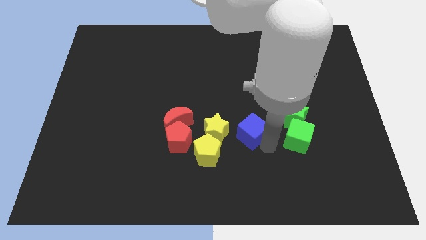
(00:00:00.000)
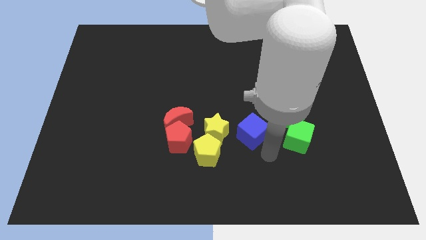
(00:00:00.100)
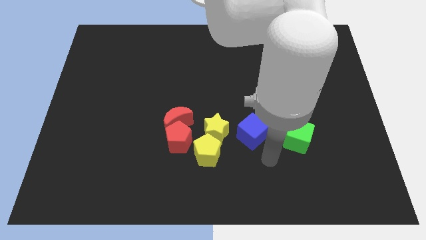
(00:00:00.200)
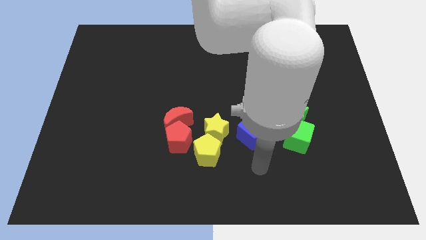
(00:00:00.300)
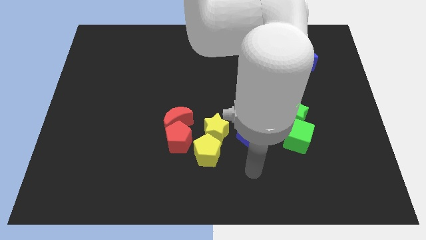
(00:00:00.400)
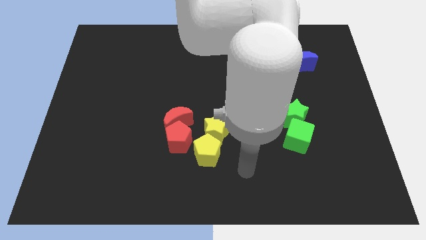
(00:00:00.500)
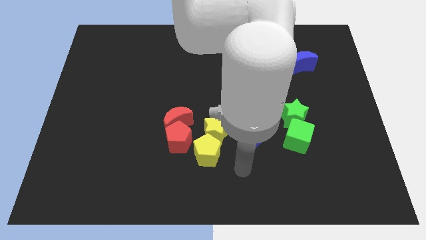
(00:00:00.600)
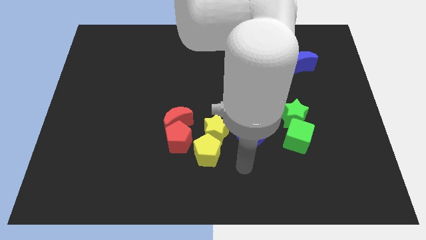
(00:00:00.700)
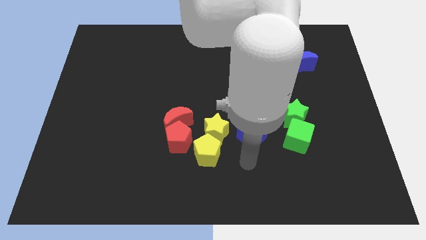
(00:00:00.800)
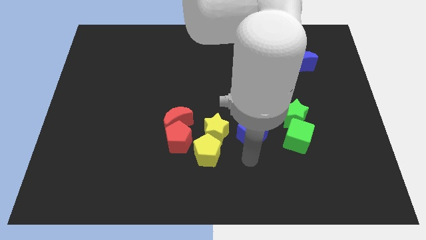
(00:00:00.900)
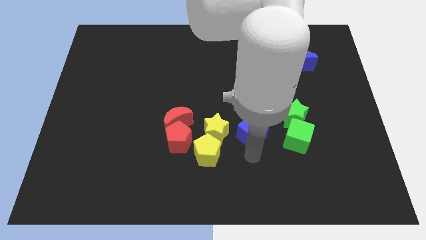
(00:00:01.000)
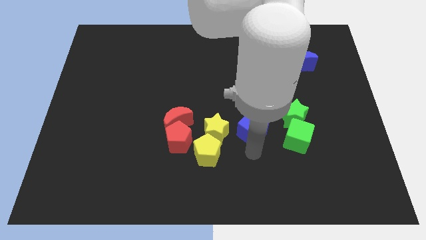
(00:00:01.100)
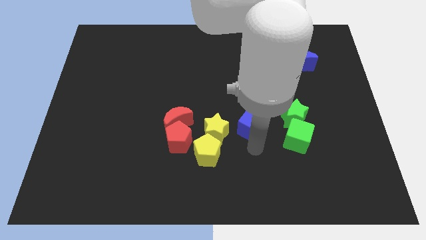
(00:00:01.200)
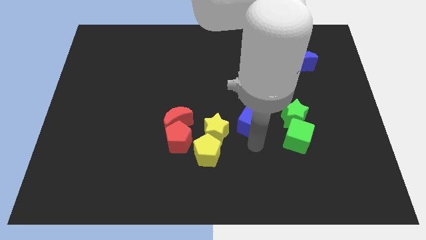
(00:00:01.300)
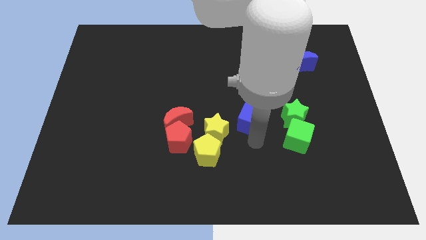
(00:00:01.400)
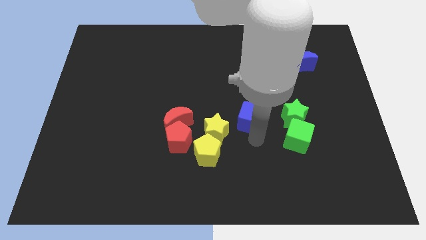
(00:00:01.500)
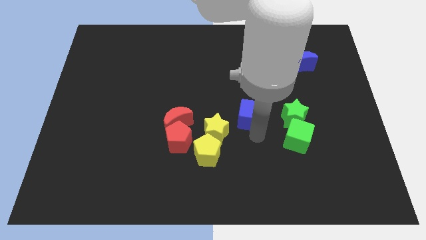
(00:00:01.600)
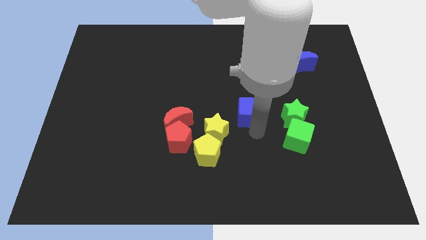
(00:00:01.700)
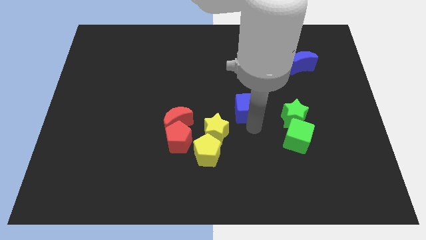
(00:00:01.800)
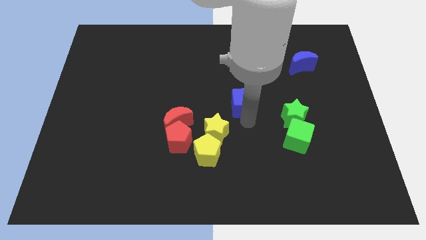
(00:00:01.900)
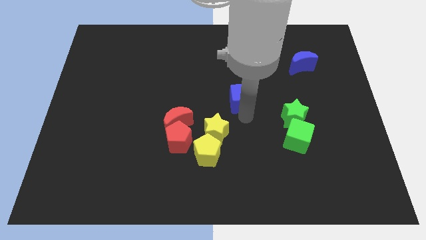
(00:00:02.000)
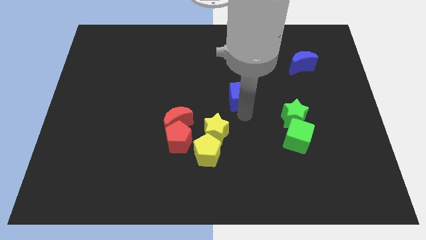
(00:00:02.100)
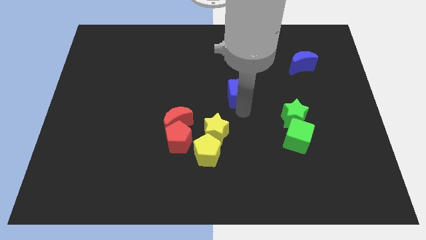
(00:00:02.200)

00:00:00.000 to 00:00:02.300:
push the blue cube upwards to the center

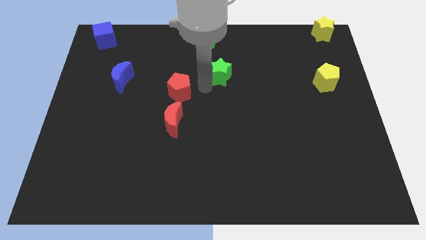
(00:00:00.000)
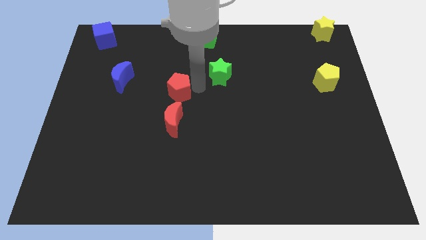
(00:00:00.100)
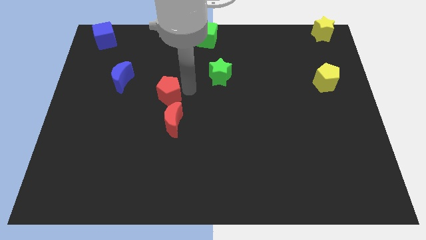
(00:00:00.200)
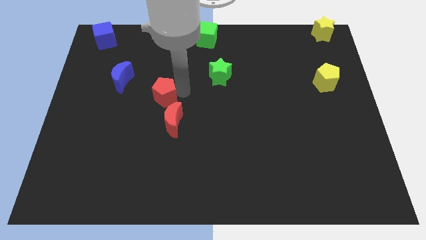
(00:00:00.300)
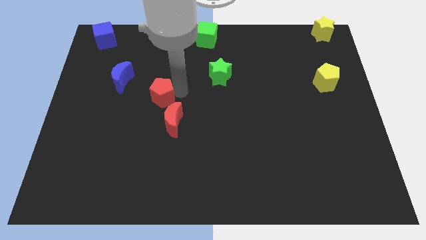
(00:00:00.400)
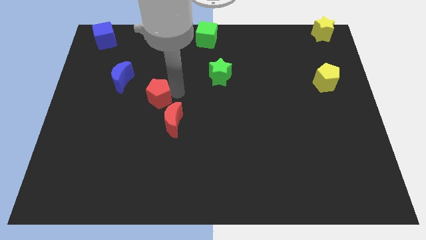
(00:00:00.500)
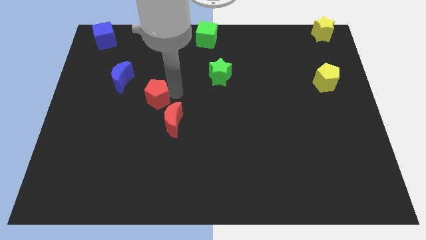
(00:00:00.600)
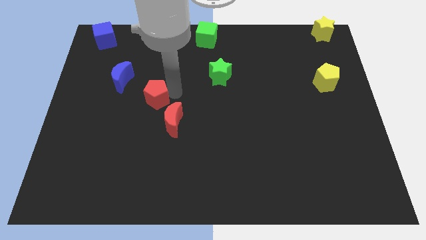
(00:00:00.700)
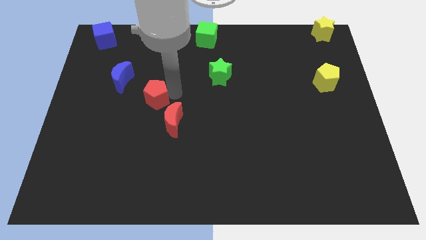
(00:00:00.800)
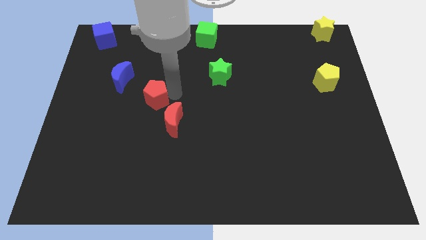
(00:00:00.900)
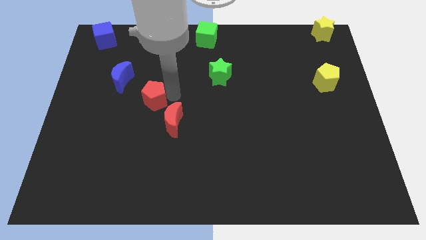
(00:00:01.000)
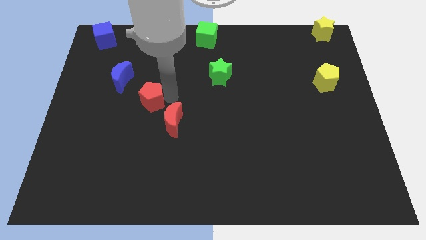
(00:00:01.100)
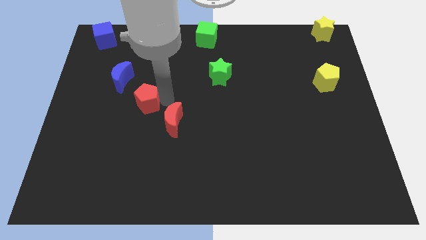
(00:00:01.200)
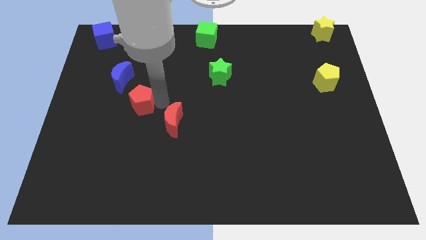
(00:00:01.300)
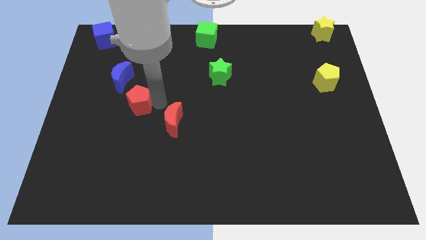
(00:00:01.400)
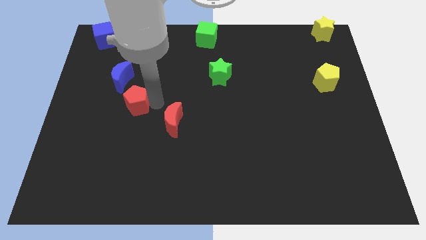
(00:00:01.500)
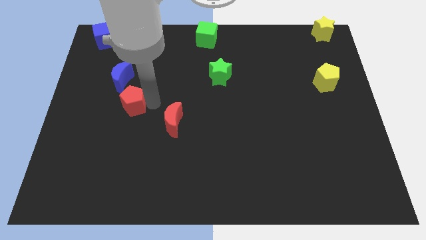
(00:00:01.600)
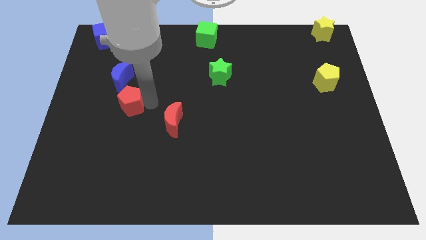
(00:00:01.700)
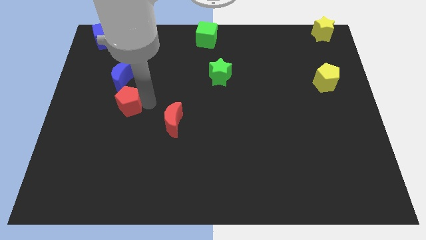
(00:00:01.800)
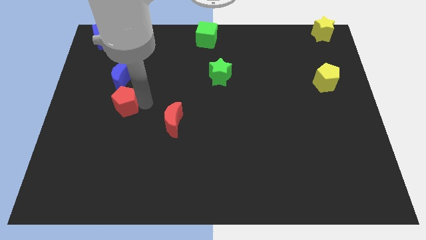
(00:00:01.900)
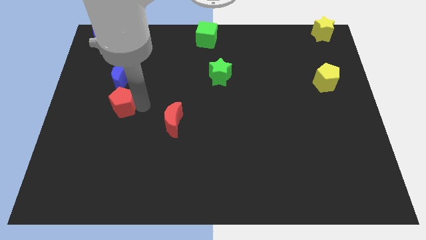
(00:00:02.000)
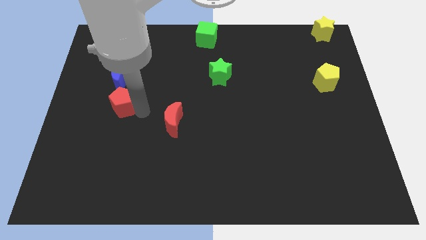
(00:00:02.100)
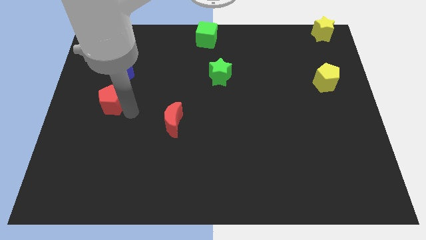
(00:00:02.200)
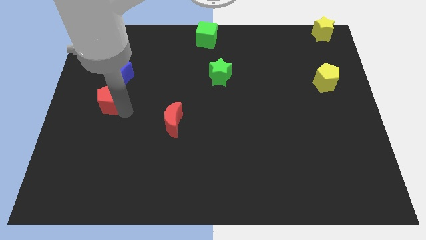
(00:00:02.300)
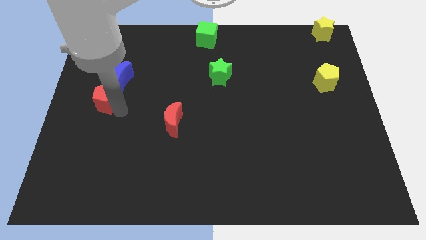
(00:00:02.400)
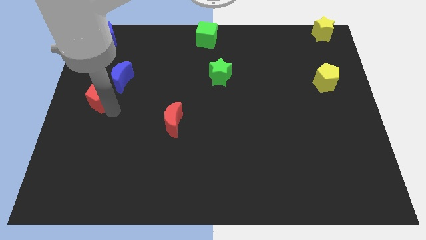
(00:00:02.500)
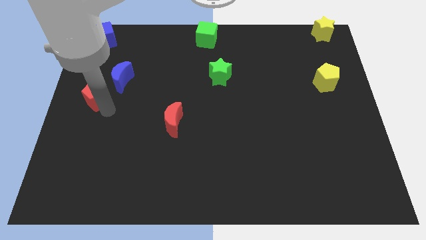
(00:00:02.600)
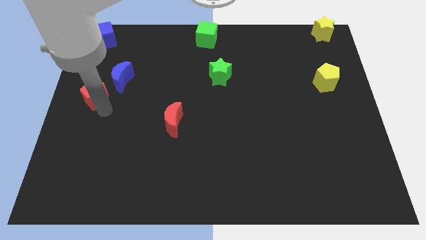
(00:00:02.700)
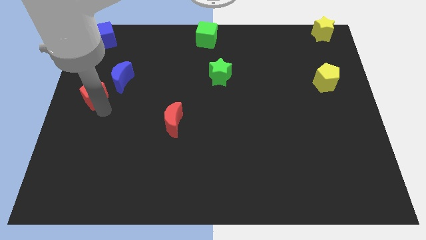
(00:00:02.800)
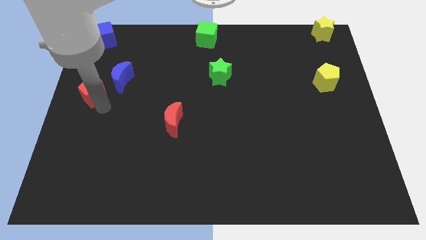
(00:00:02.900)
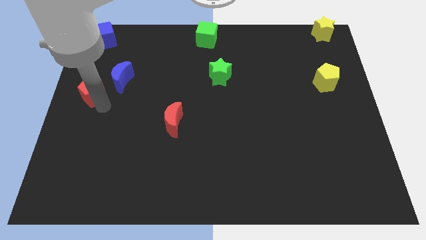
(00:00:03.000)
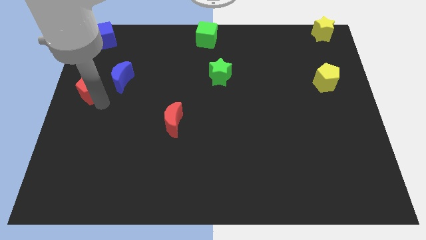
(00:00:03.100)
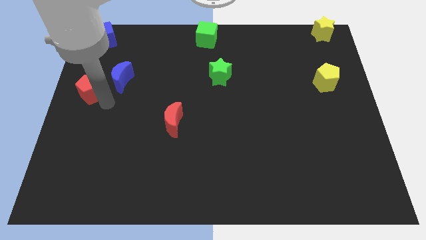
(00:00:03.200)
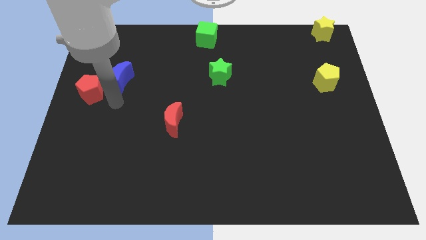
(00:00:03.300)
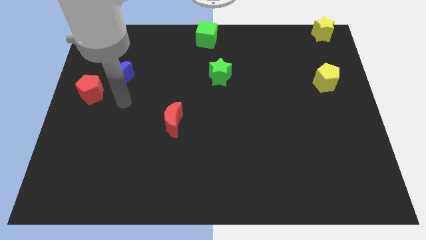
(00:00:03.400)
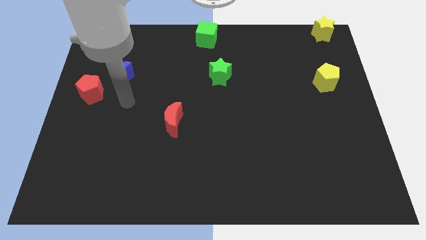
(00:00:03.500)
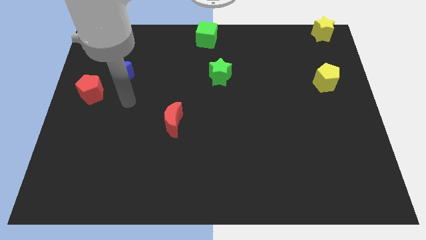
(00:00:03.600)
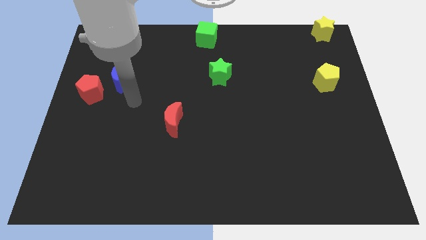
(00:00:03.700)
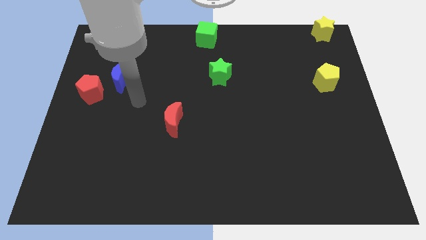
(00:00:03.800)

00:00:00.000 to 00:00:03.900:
move the red pentagon towards the left center

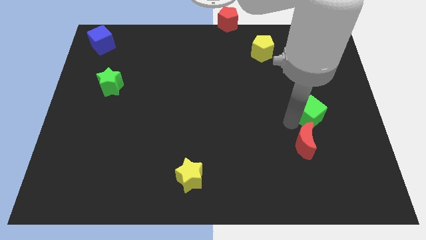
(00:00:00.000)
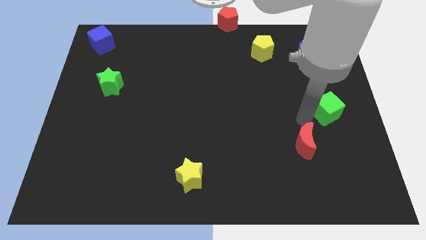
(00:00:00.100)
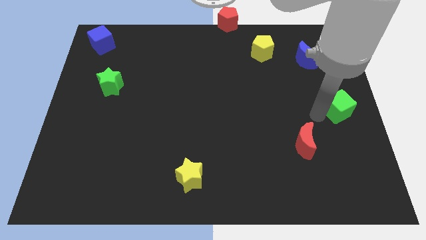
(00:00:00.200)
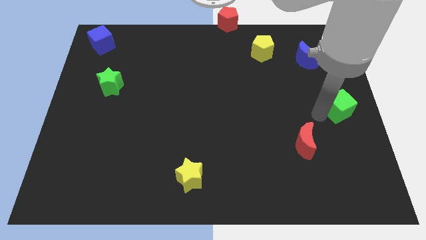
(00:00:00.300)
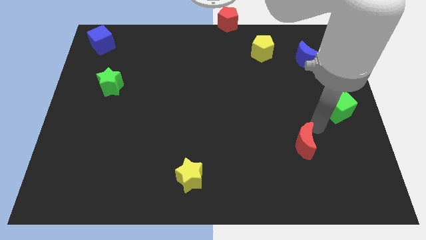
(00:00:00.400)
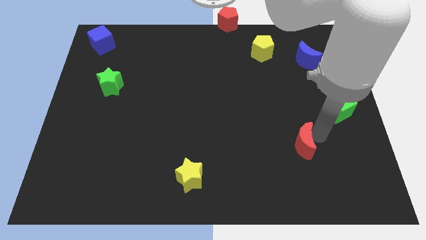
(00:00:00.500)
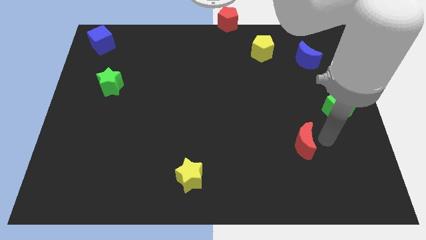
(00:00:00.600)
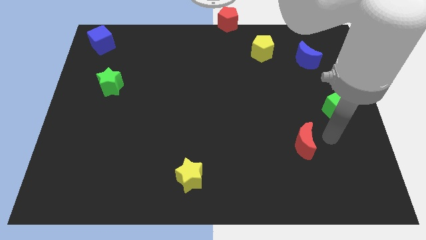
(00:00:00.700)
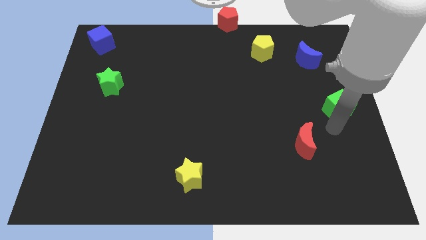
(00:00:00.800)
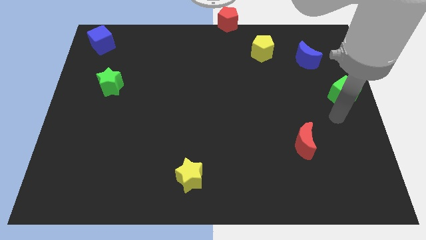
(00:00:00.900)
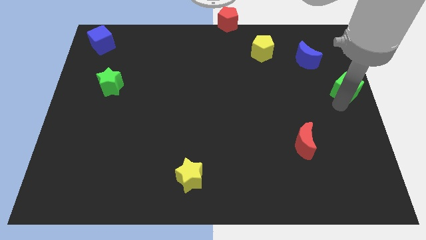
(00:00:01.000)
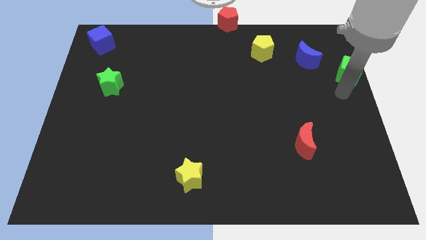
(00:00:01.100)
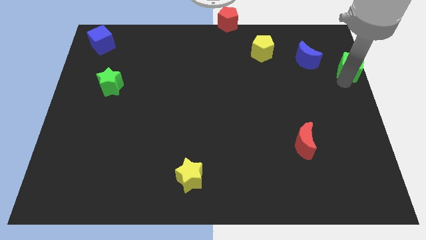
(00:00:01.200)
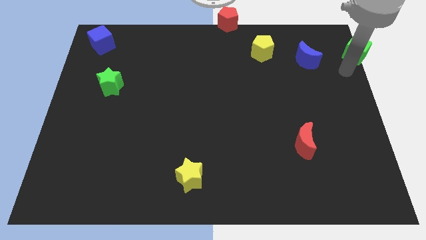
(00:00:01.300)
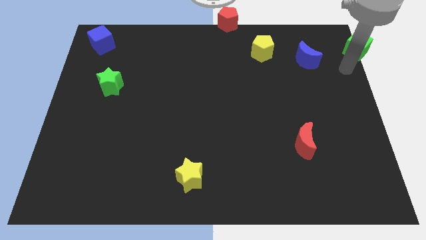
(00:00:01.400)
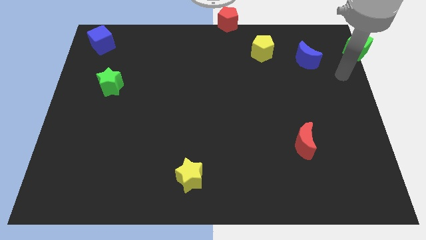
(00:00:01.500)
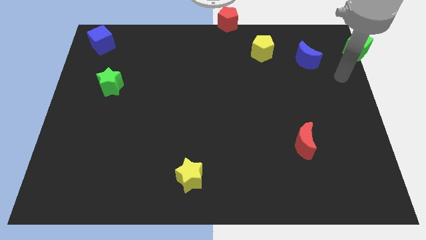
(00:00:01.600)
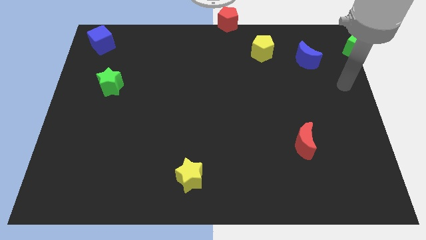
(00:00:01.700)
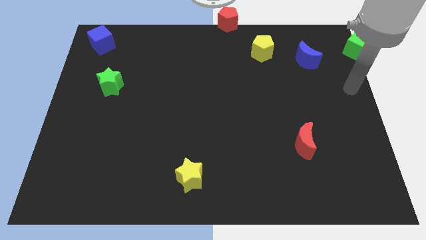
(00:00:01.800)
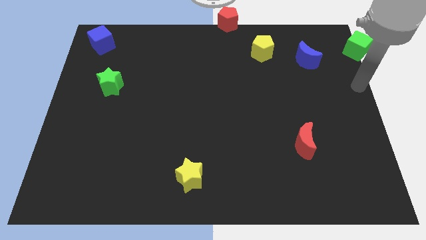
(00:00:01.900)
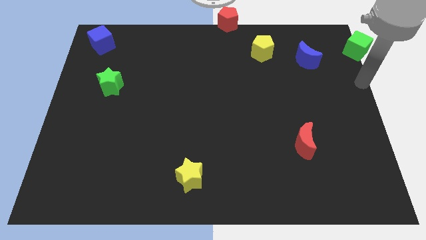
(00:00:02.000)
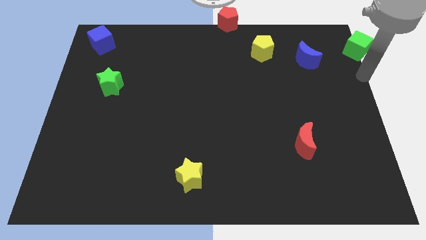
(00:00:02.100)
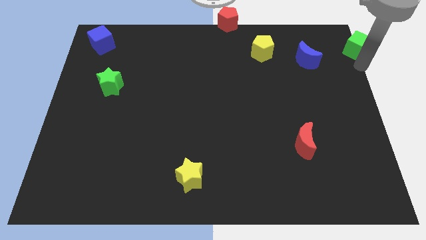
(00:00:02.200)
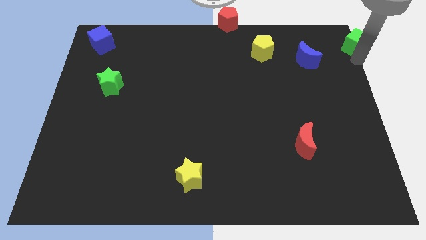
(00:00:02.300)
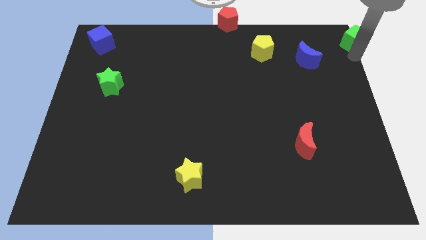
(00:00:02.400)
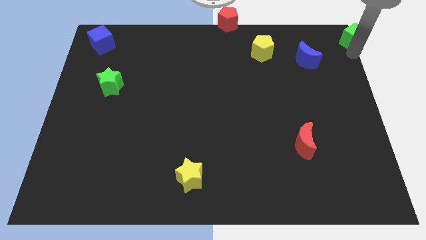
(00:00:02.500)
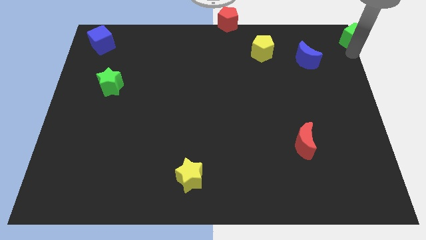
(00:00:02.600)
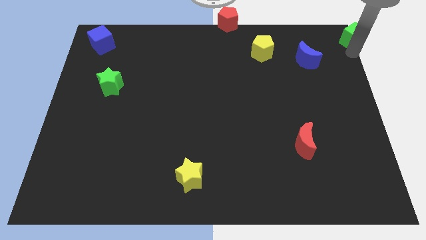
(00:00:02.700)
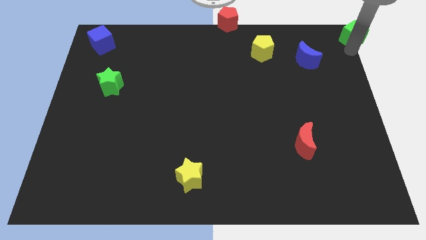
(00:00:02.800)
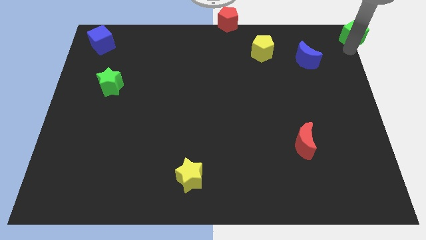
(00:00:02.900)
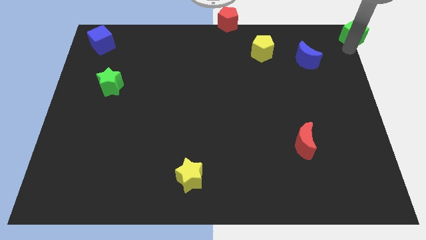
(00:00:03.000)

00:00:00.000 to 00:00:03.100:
push the green cube to the top right corner of the board
